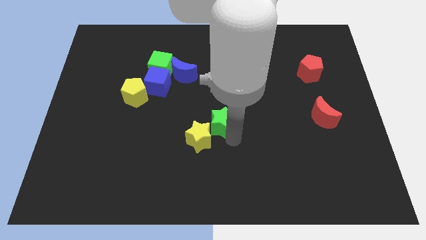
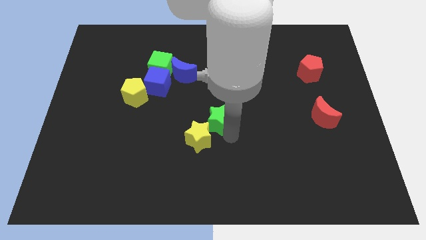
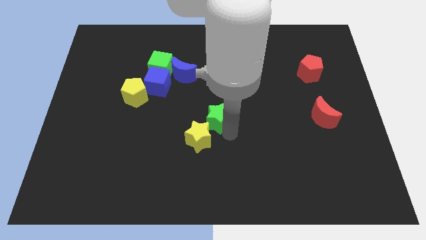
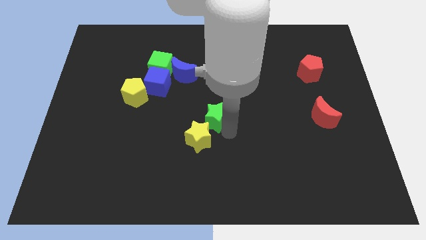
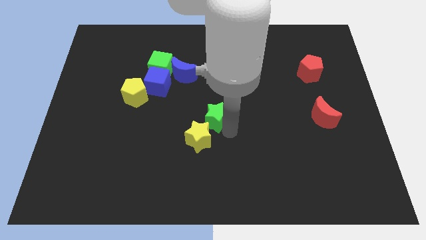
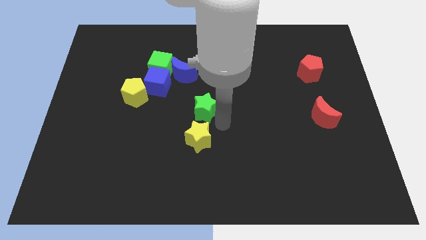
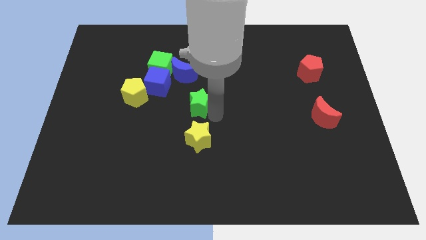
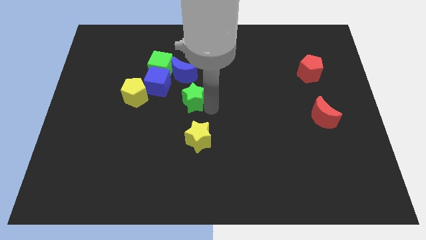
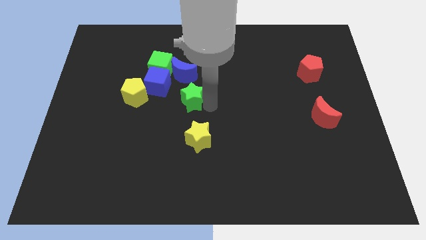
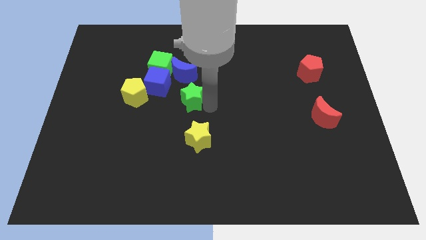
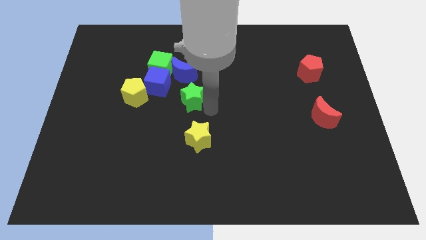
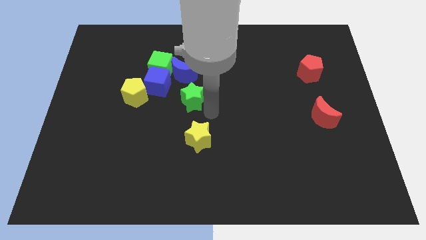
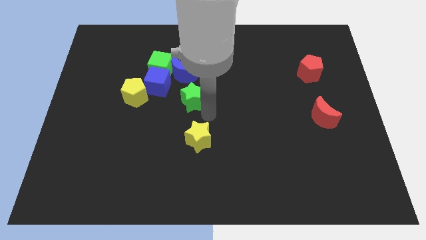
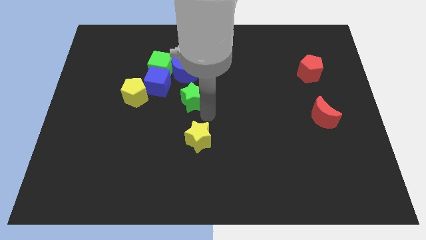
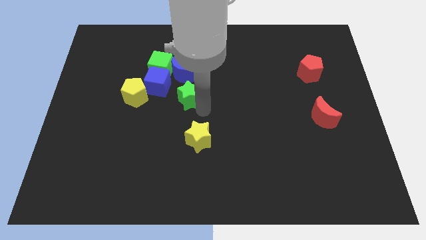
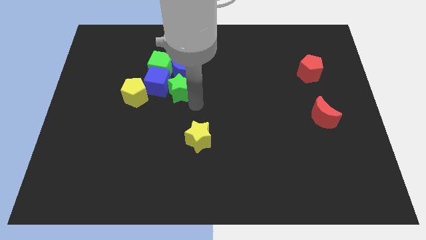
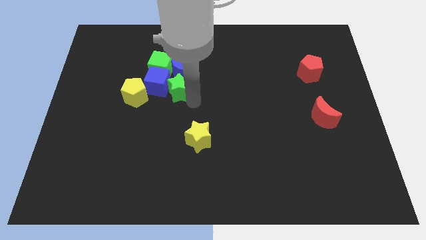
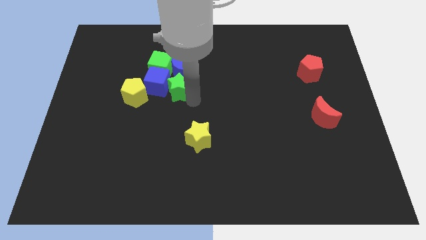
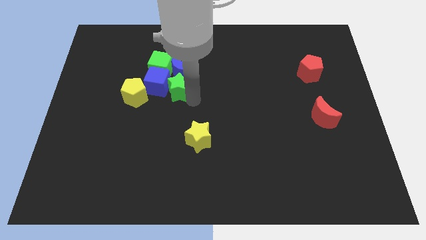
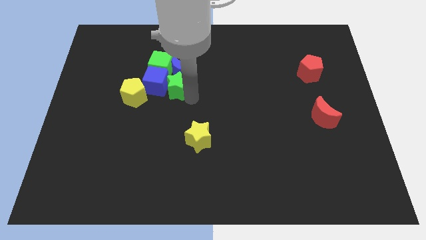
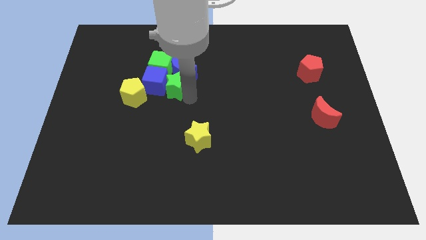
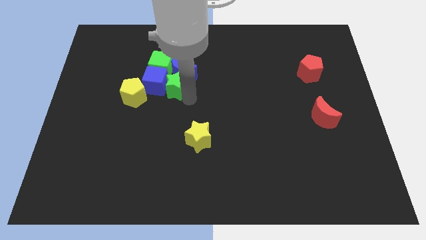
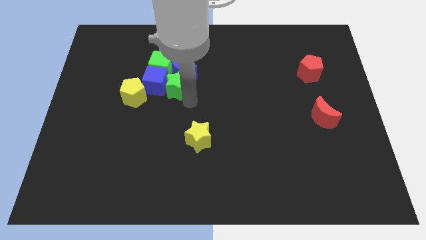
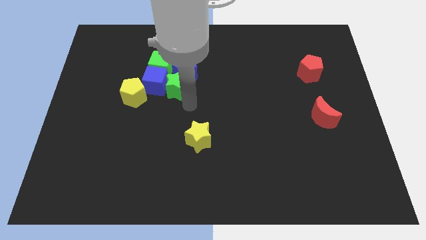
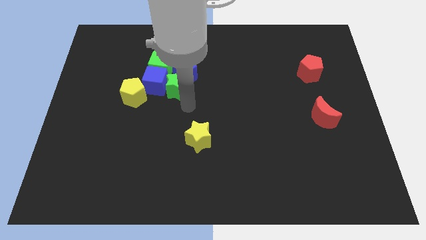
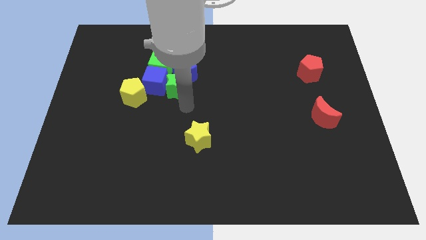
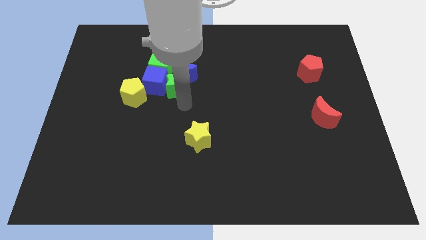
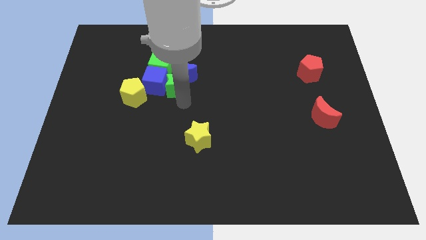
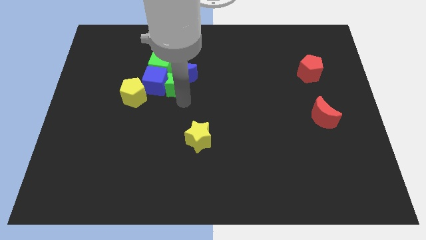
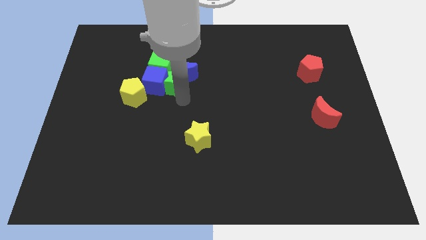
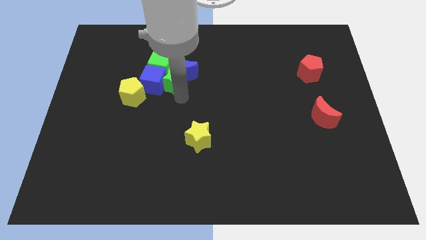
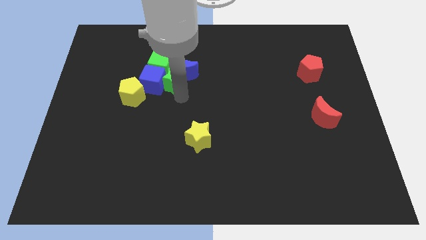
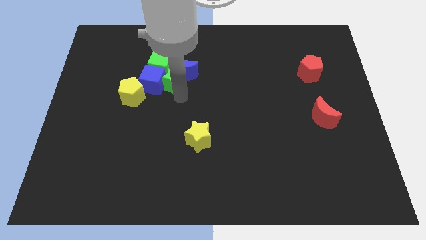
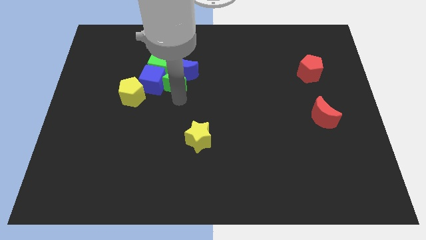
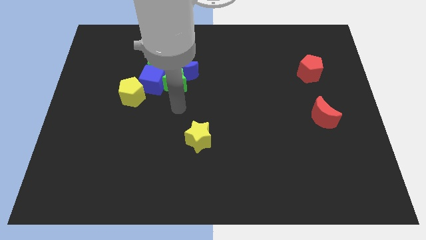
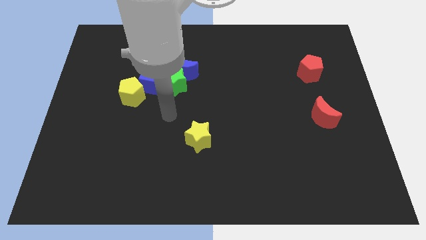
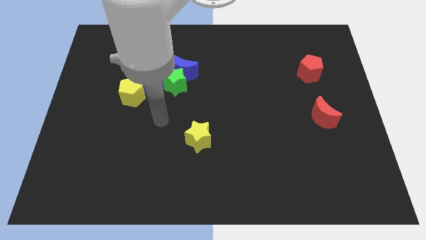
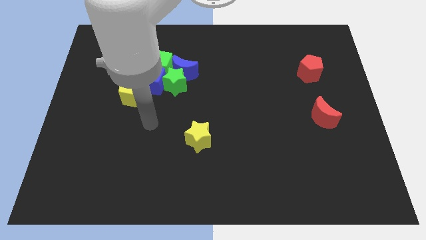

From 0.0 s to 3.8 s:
slightly push the green star into the green cube

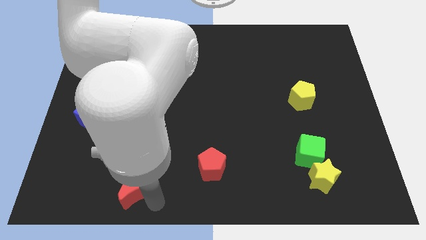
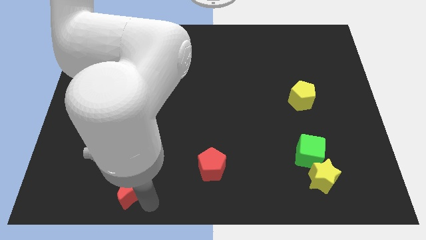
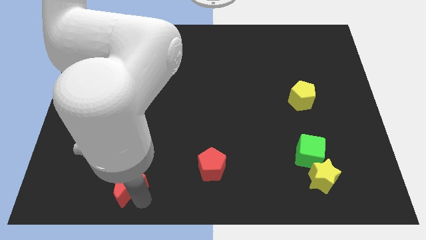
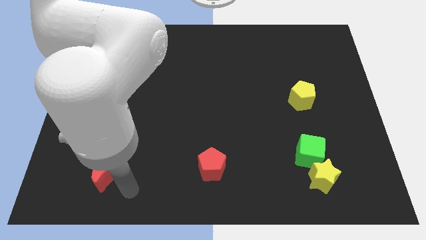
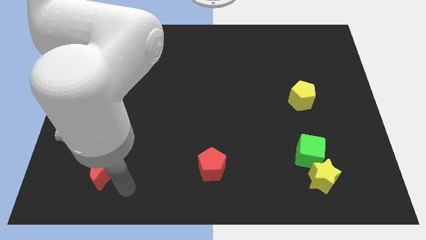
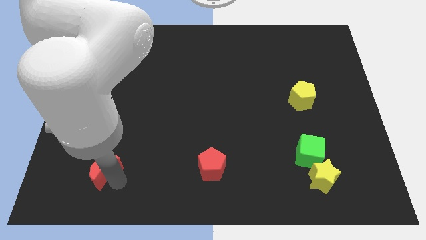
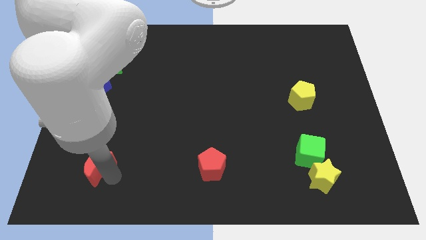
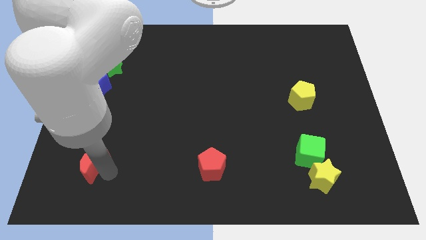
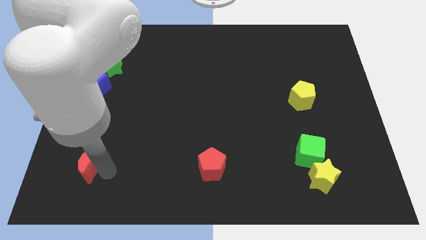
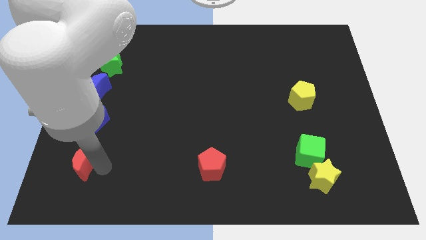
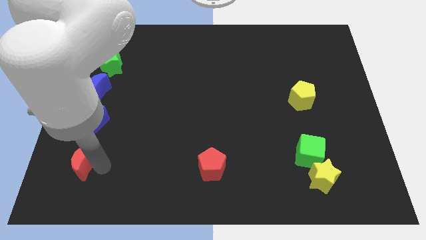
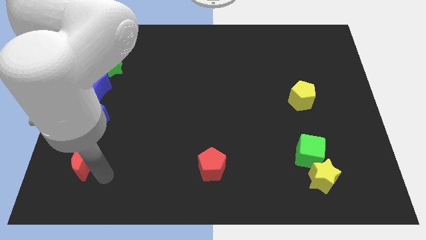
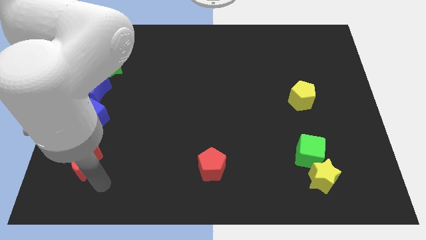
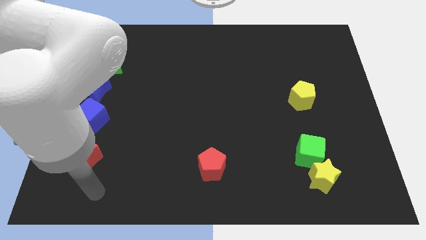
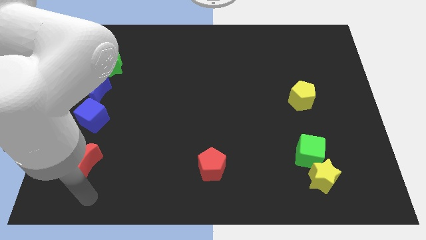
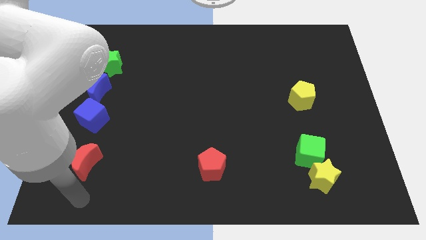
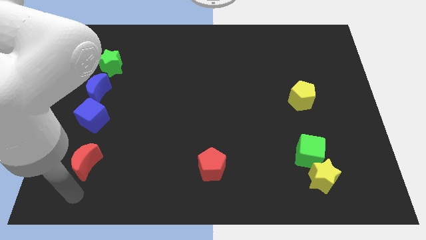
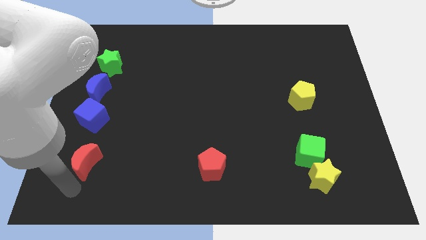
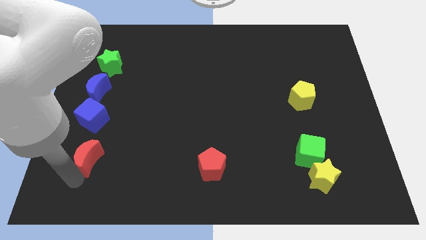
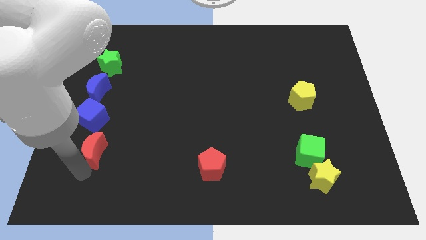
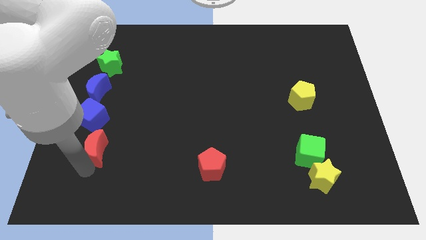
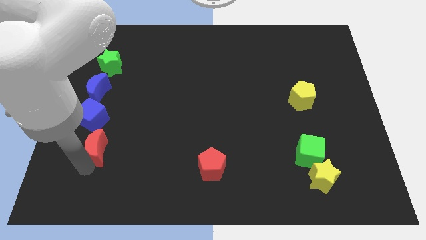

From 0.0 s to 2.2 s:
place red moon vertically to other blocks

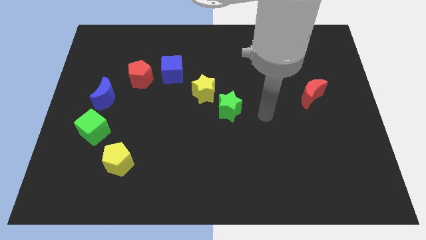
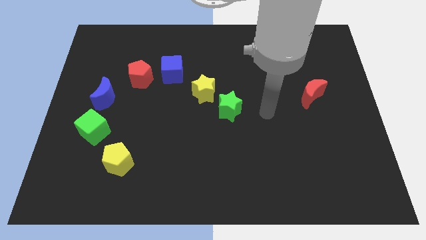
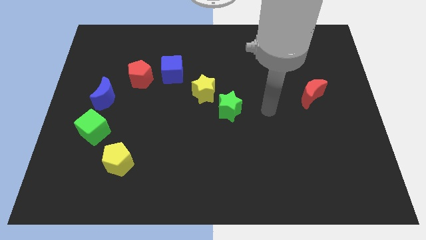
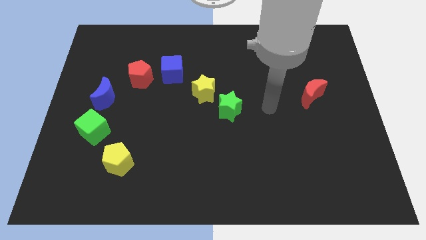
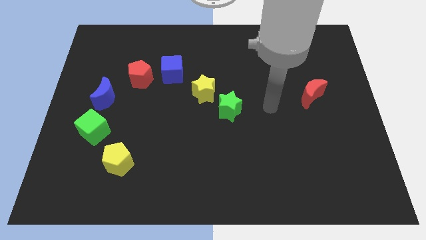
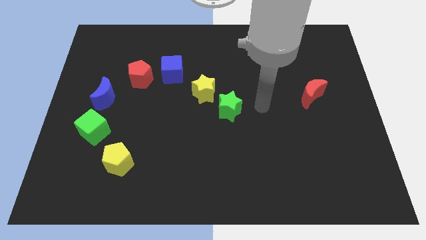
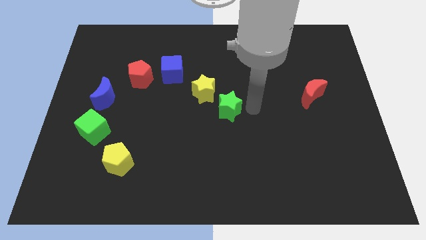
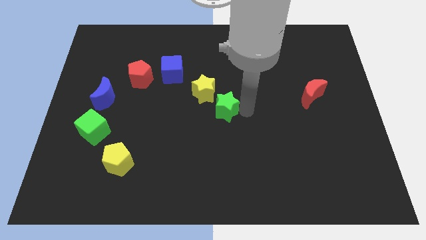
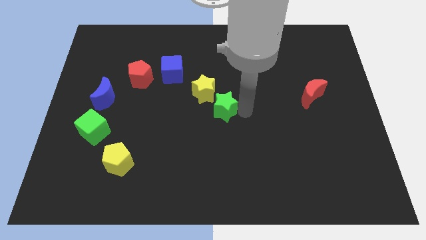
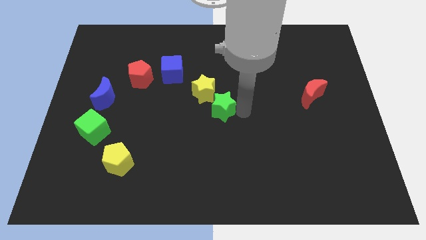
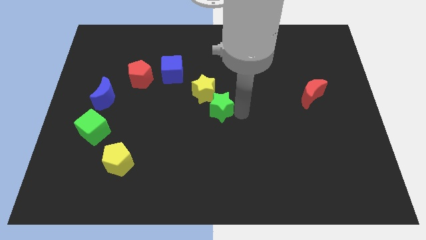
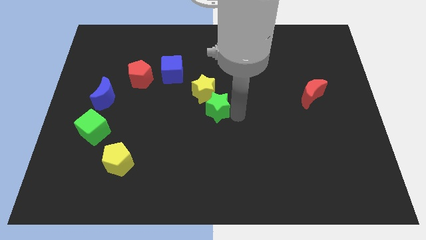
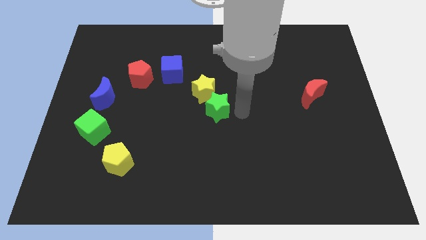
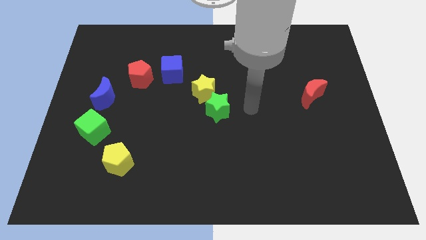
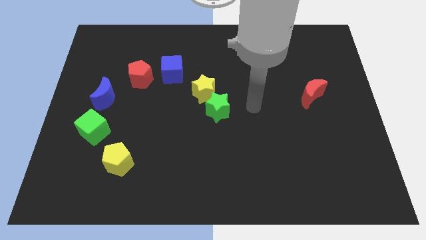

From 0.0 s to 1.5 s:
move the green star into the yellow star

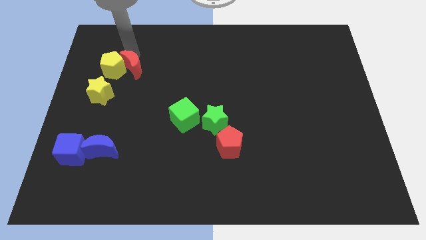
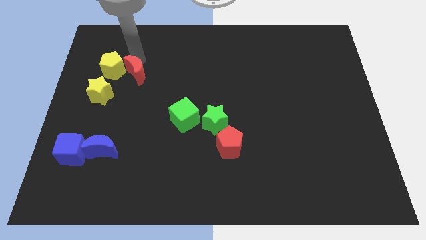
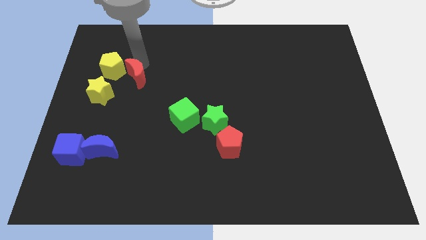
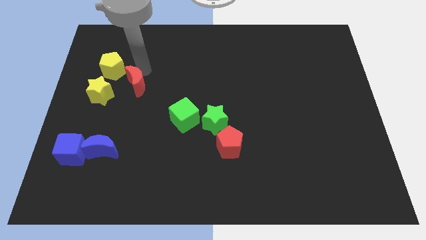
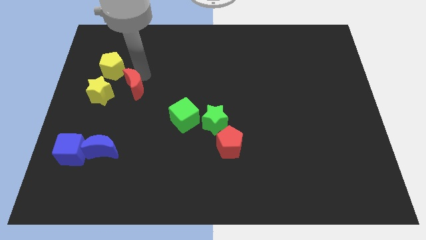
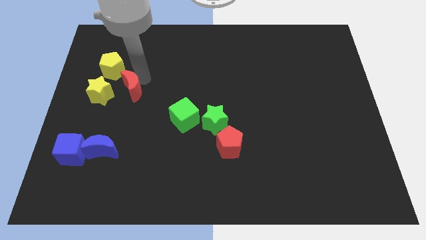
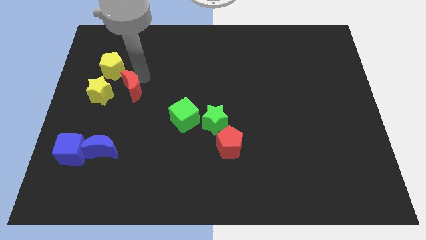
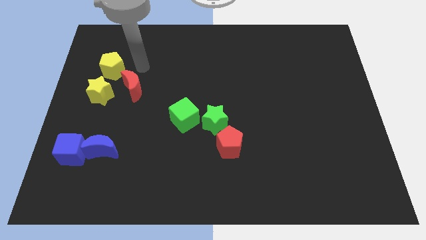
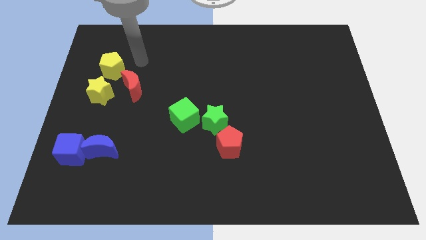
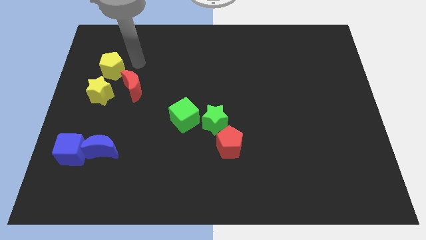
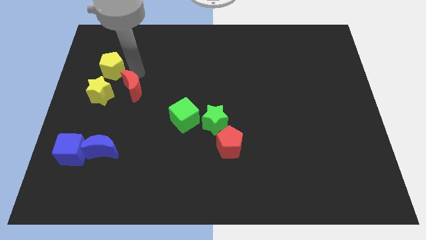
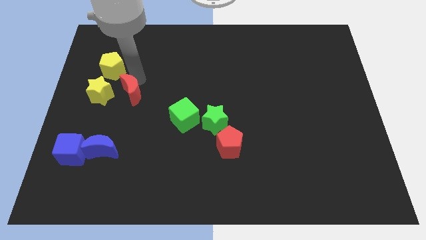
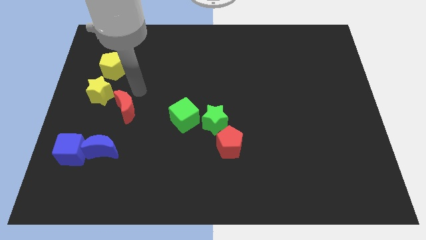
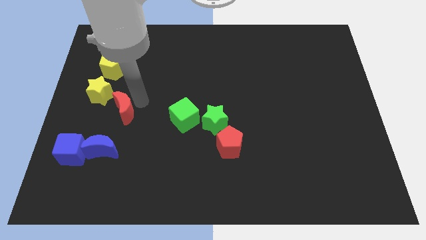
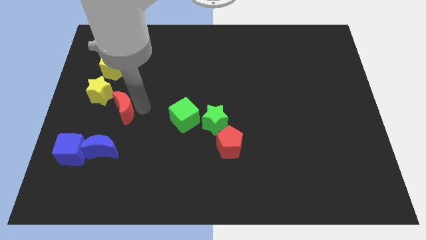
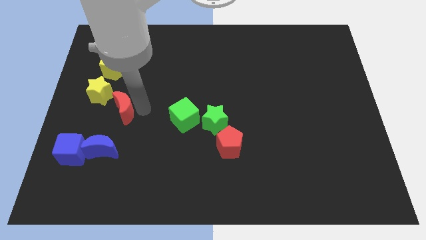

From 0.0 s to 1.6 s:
drag the red crescent to the bottom right of yellow star
